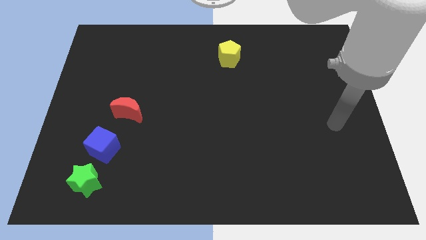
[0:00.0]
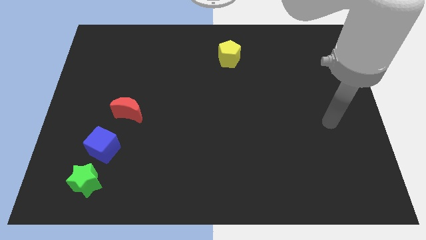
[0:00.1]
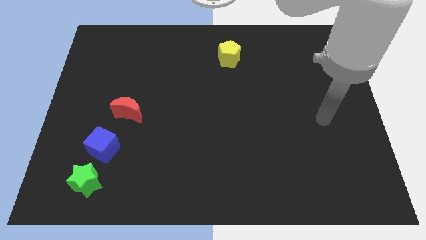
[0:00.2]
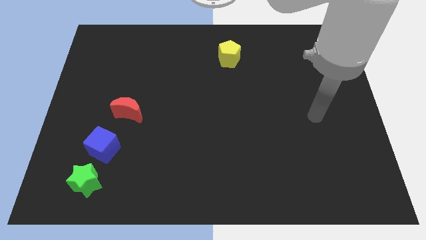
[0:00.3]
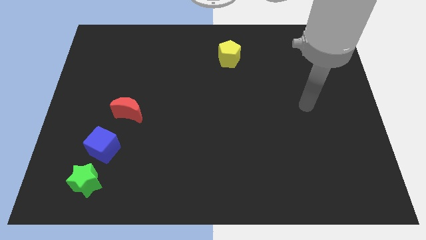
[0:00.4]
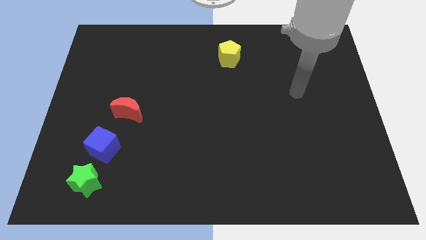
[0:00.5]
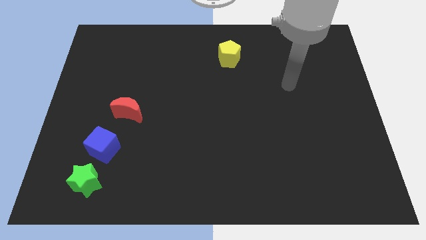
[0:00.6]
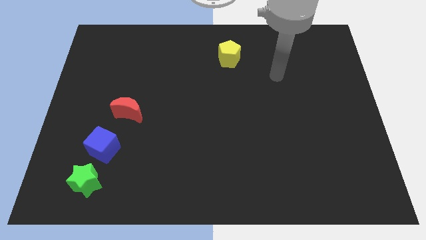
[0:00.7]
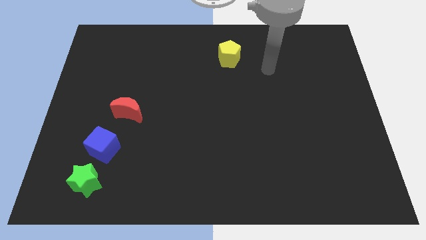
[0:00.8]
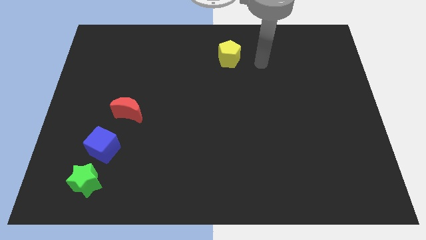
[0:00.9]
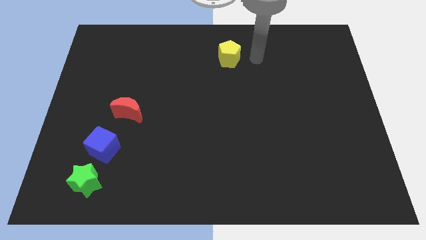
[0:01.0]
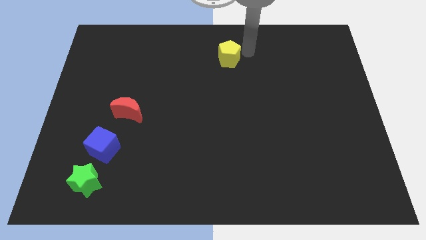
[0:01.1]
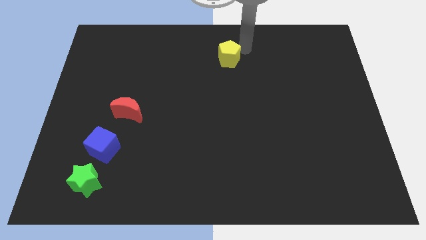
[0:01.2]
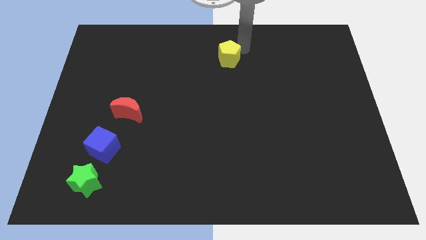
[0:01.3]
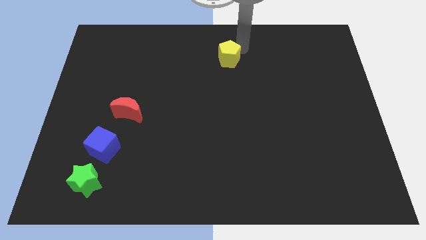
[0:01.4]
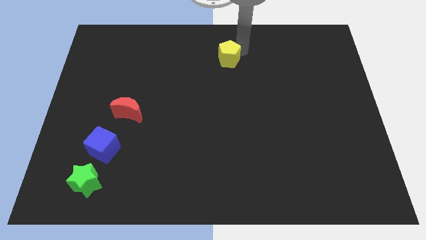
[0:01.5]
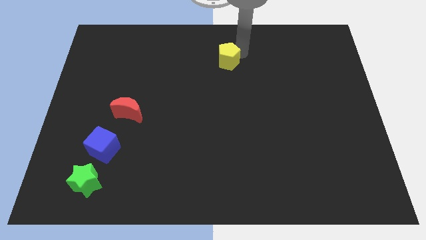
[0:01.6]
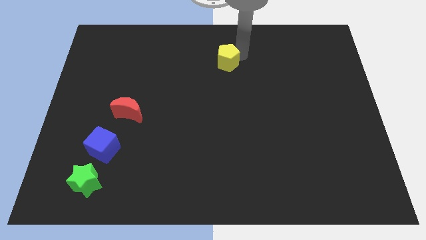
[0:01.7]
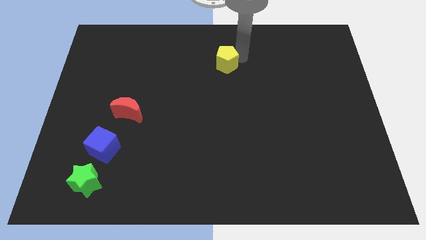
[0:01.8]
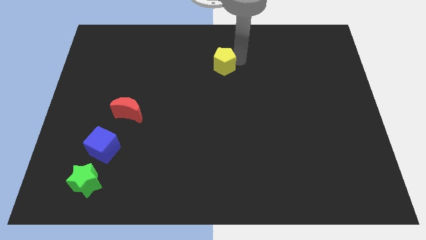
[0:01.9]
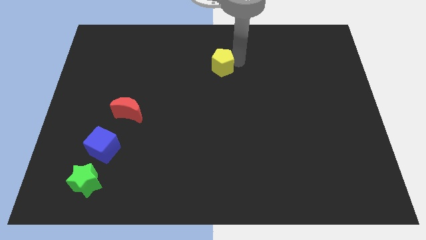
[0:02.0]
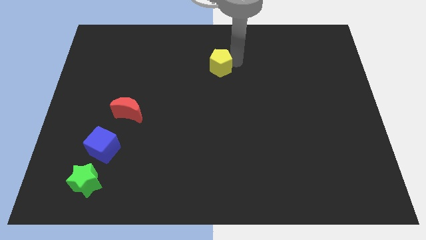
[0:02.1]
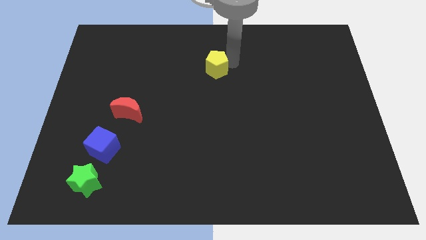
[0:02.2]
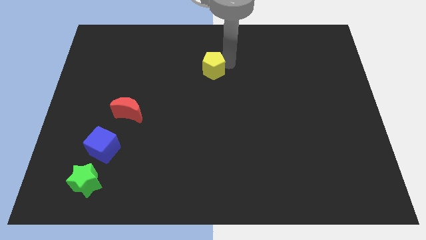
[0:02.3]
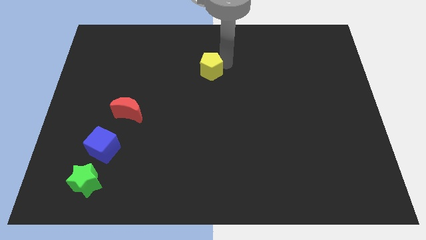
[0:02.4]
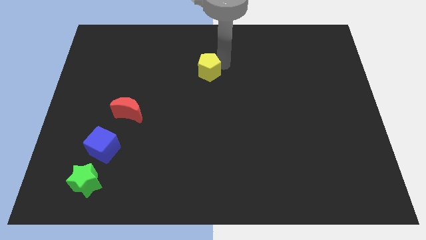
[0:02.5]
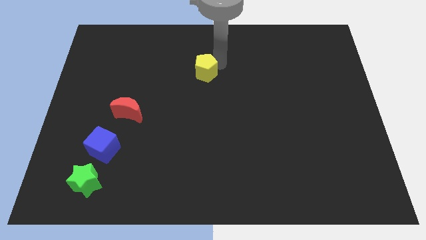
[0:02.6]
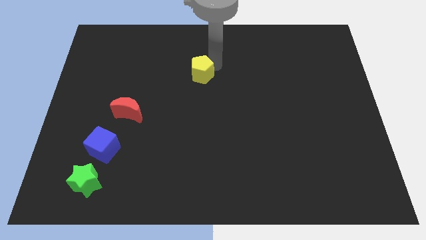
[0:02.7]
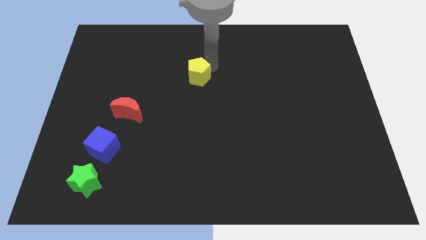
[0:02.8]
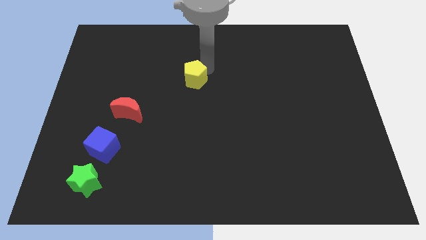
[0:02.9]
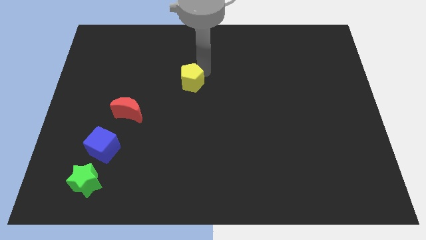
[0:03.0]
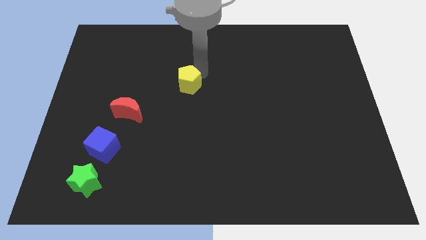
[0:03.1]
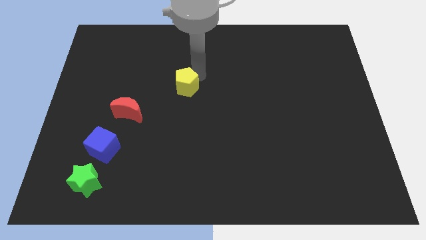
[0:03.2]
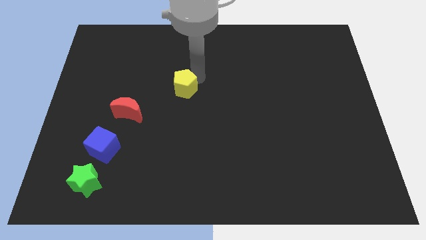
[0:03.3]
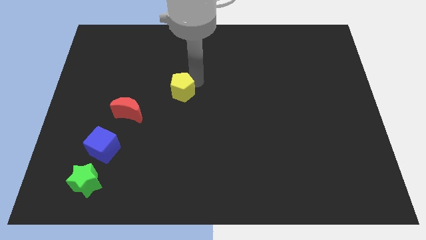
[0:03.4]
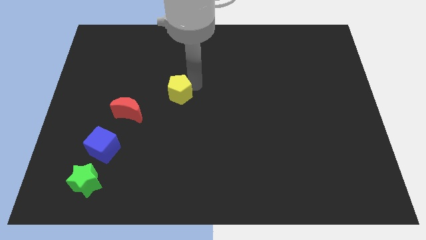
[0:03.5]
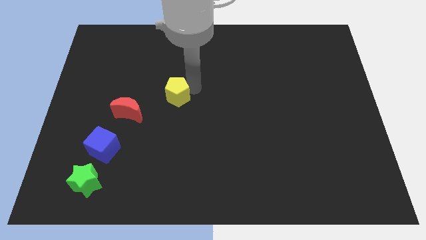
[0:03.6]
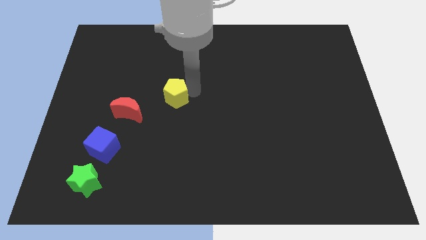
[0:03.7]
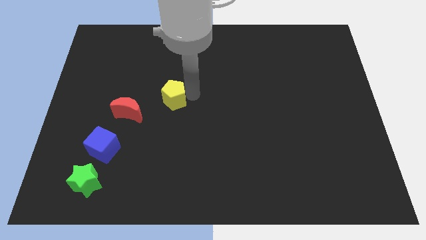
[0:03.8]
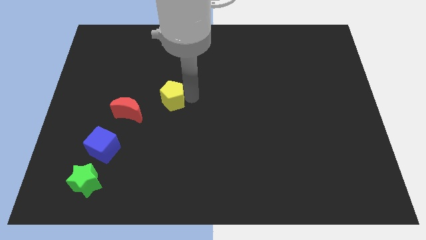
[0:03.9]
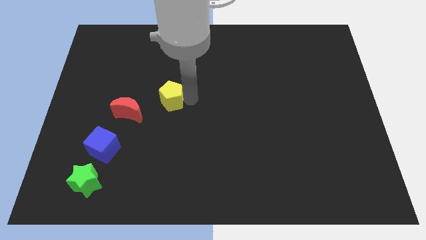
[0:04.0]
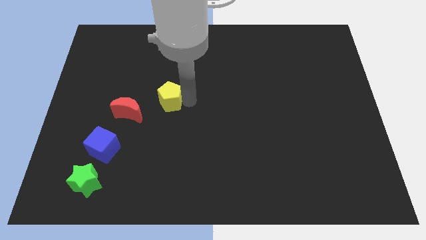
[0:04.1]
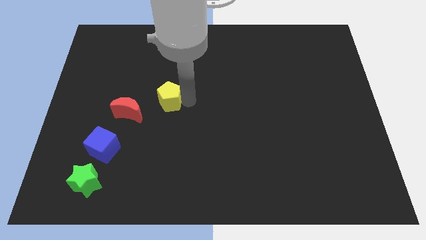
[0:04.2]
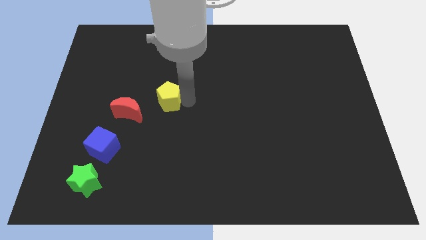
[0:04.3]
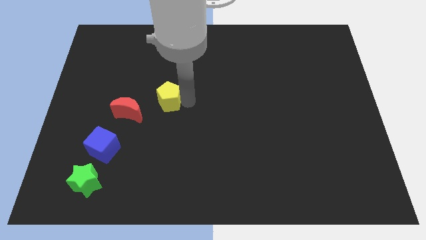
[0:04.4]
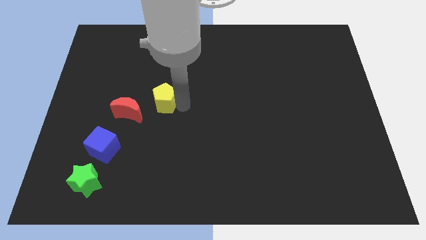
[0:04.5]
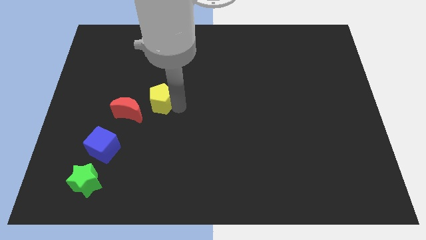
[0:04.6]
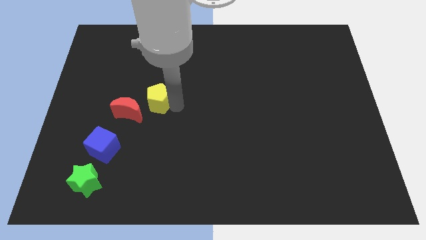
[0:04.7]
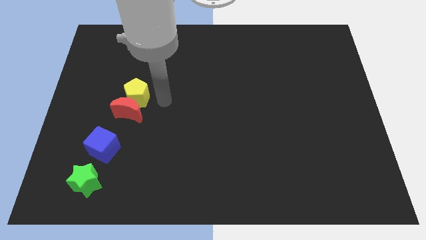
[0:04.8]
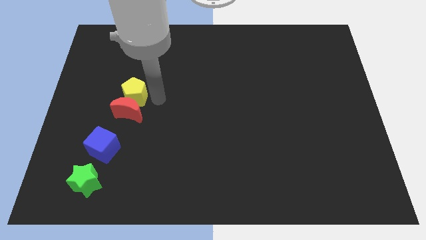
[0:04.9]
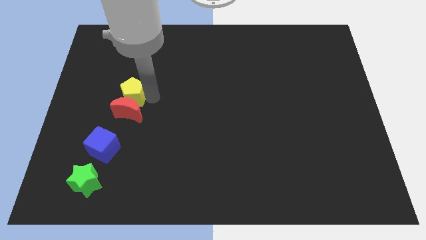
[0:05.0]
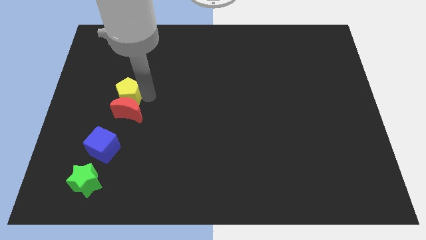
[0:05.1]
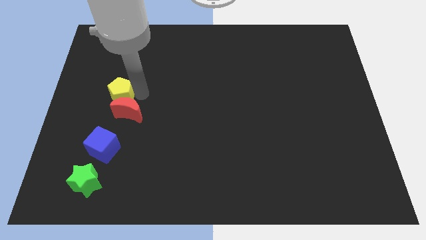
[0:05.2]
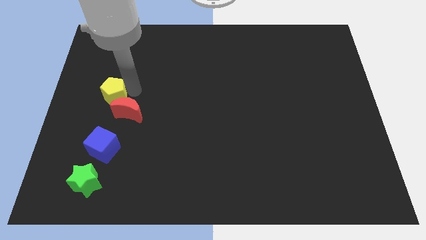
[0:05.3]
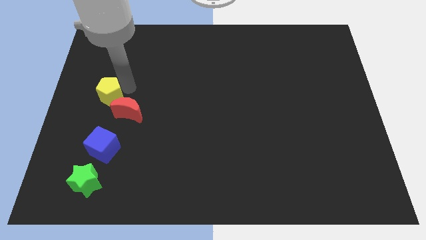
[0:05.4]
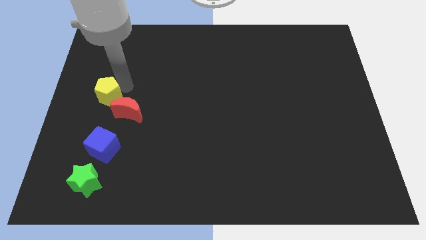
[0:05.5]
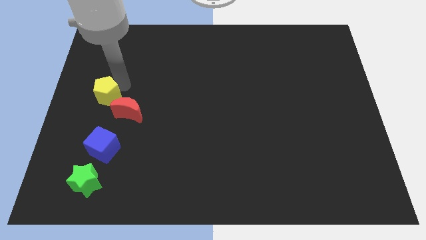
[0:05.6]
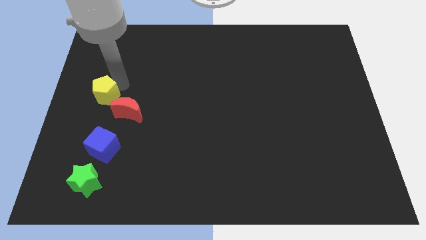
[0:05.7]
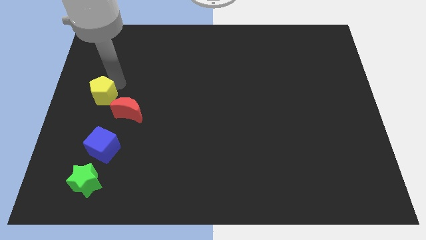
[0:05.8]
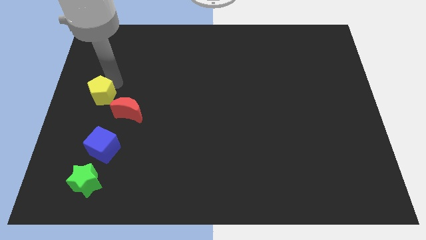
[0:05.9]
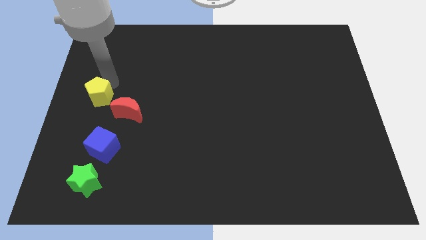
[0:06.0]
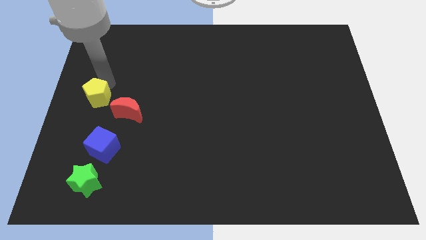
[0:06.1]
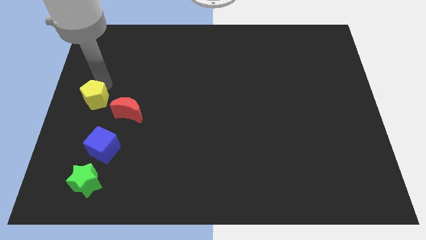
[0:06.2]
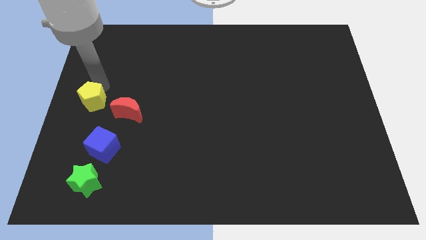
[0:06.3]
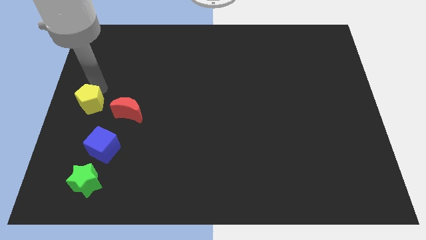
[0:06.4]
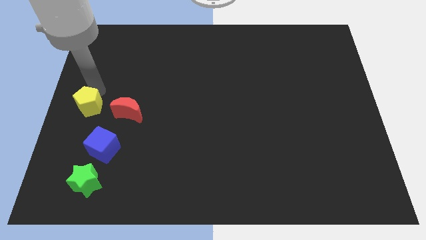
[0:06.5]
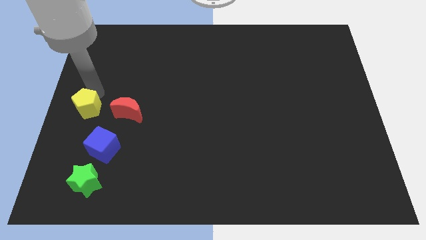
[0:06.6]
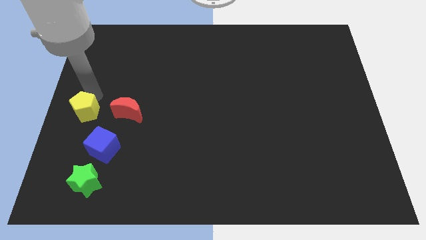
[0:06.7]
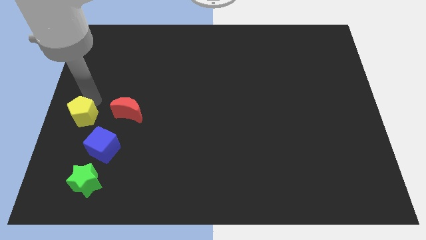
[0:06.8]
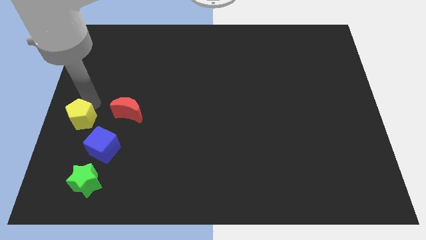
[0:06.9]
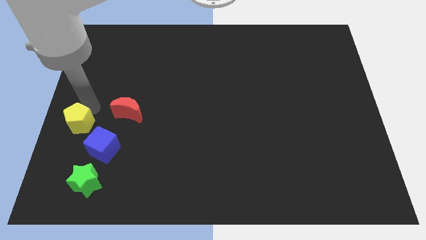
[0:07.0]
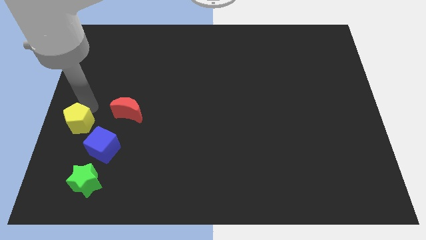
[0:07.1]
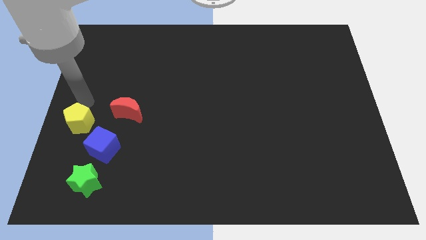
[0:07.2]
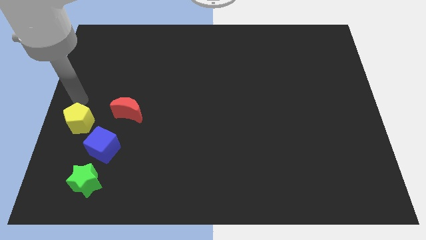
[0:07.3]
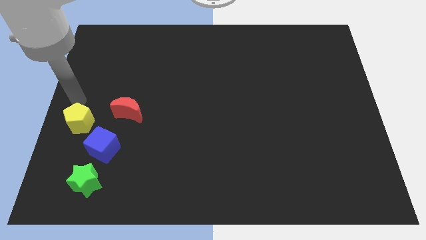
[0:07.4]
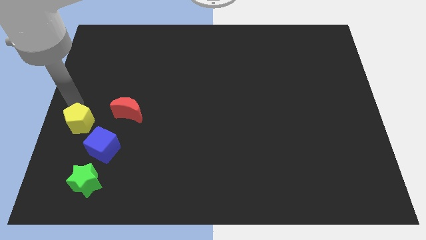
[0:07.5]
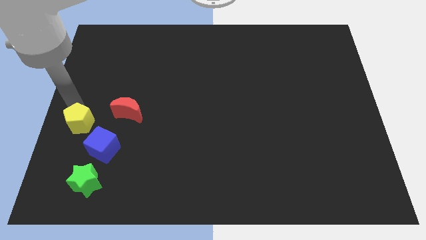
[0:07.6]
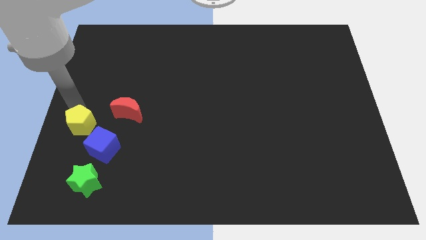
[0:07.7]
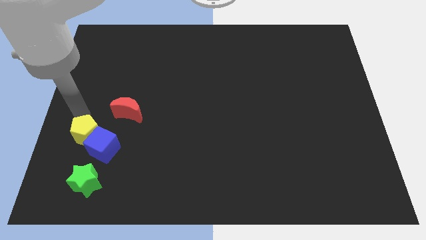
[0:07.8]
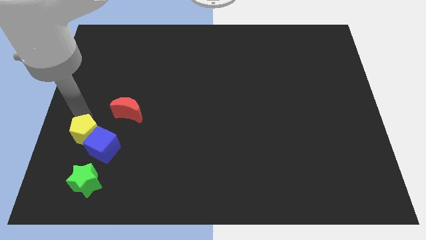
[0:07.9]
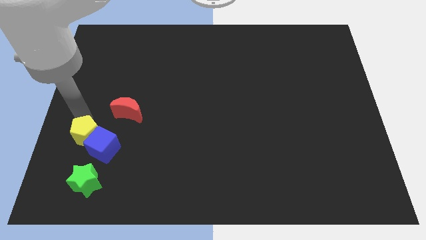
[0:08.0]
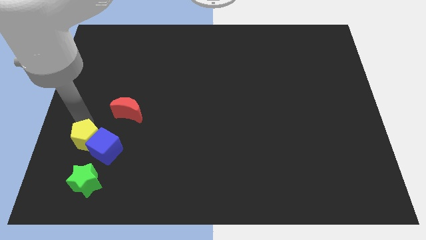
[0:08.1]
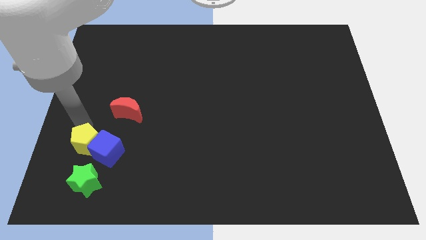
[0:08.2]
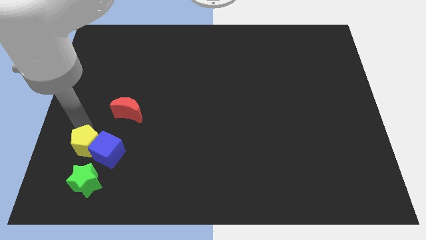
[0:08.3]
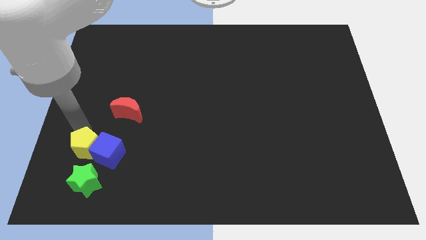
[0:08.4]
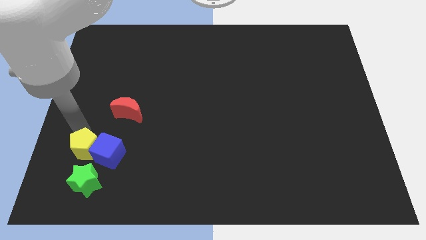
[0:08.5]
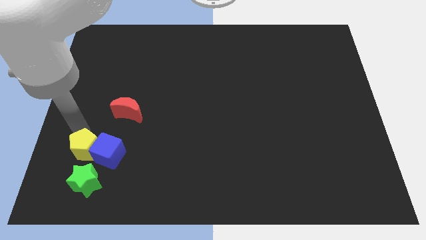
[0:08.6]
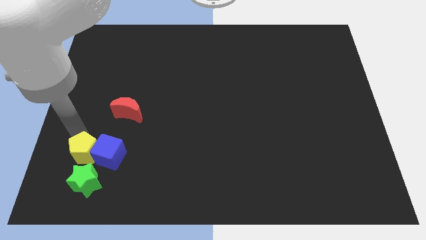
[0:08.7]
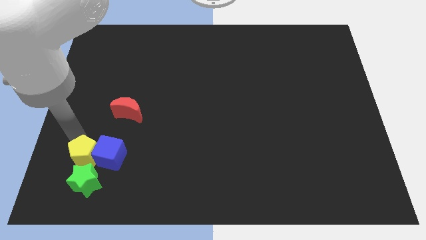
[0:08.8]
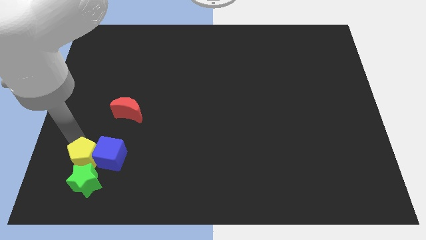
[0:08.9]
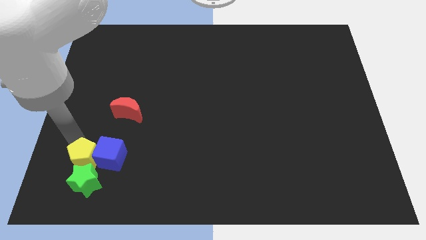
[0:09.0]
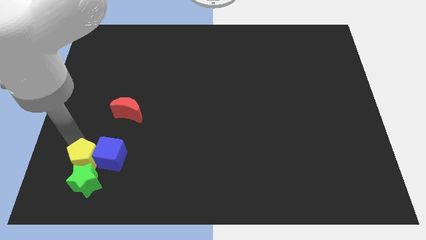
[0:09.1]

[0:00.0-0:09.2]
push the yellow pentagon close to the star
